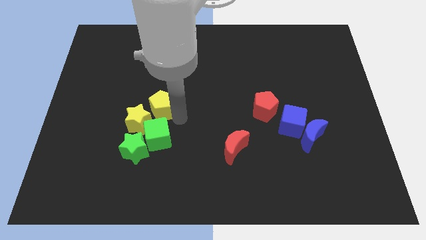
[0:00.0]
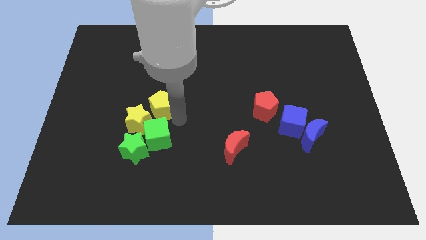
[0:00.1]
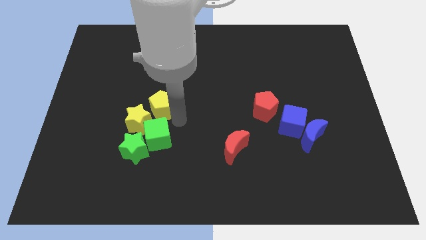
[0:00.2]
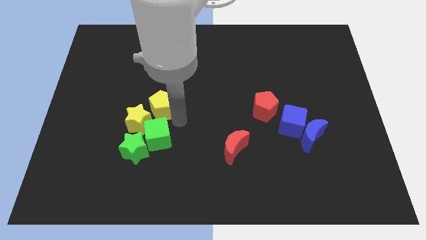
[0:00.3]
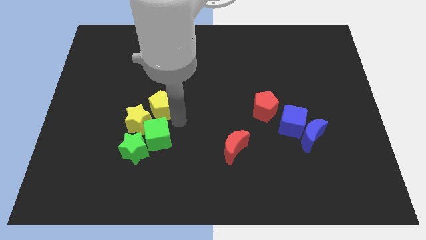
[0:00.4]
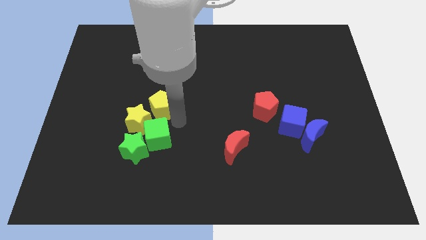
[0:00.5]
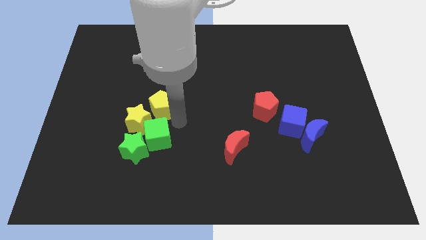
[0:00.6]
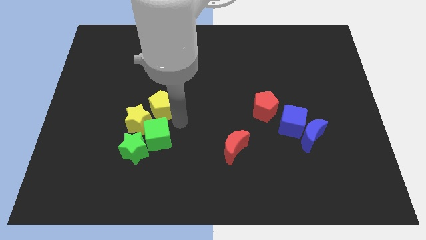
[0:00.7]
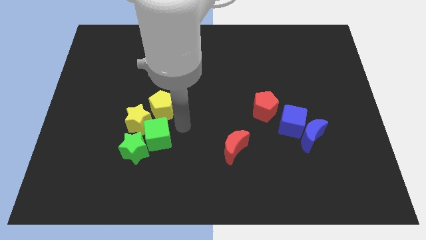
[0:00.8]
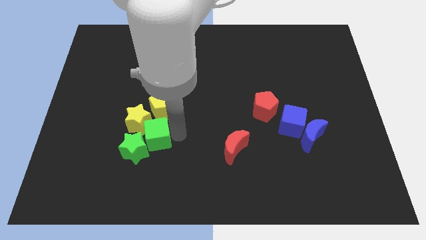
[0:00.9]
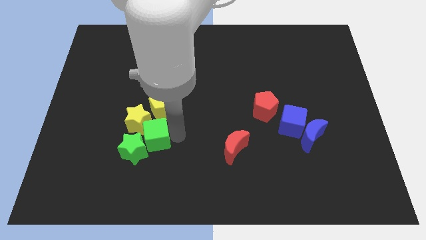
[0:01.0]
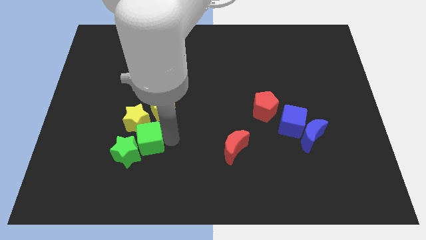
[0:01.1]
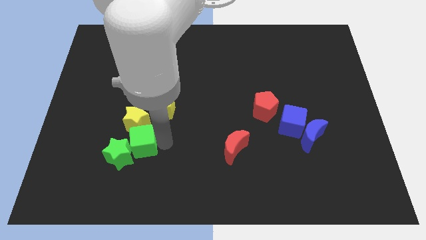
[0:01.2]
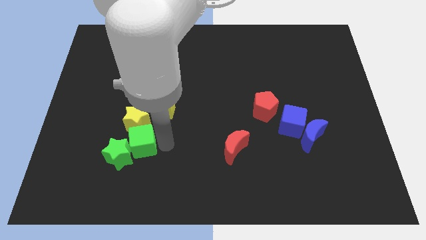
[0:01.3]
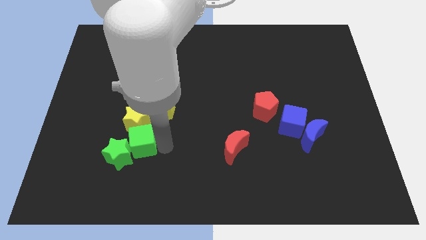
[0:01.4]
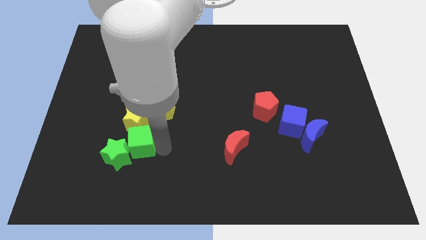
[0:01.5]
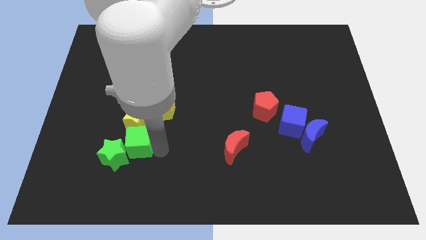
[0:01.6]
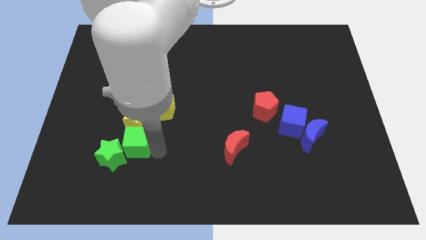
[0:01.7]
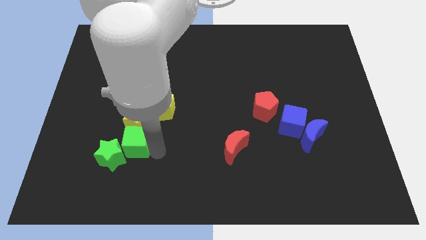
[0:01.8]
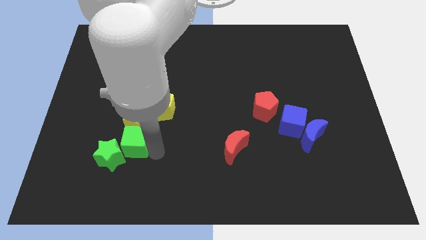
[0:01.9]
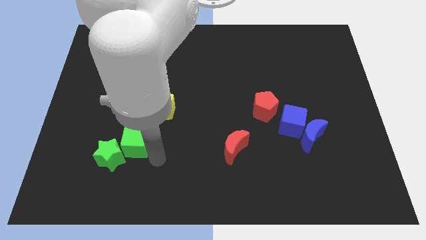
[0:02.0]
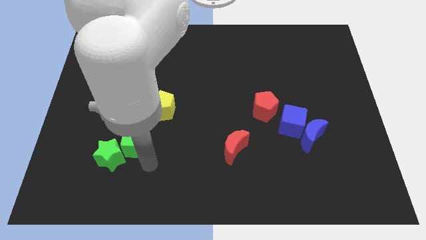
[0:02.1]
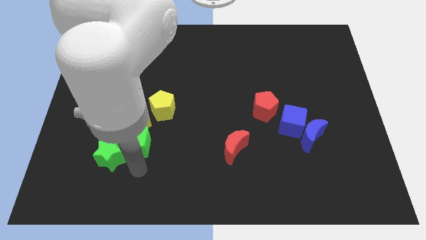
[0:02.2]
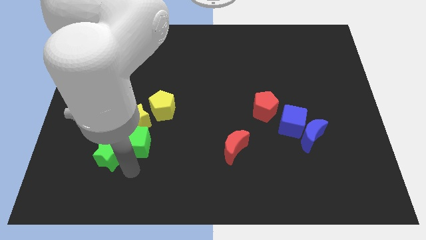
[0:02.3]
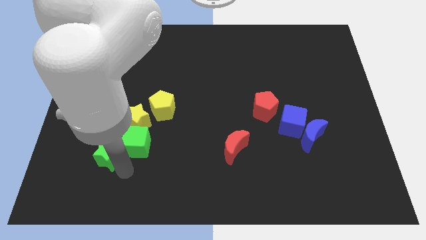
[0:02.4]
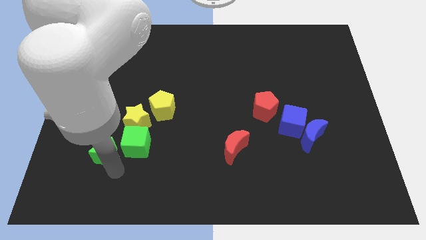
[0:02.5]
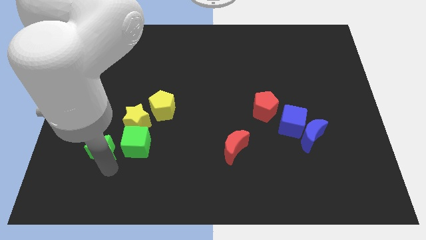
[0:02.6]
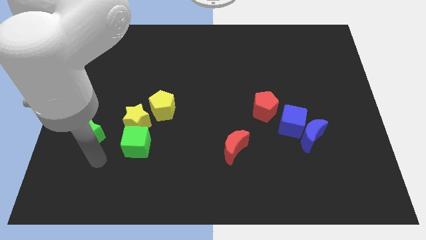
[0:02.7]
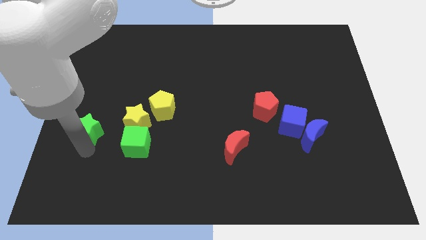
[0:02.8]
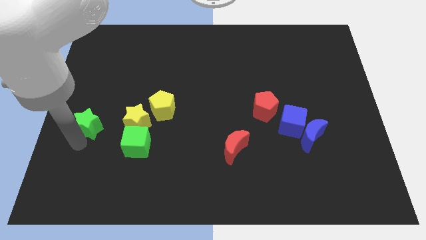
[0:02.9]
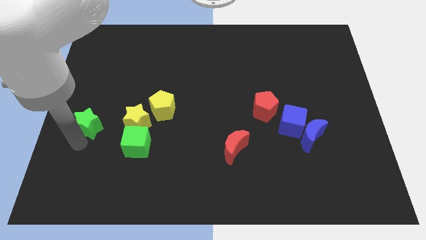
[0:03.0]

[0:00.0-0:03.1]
separate green star from green cube

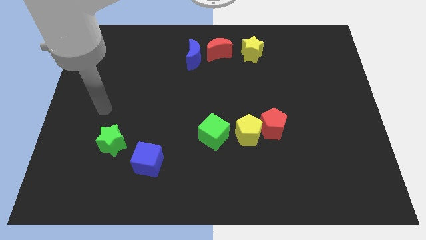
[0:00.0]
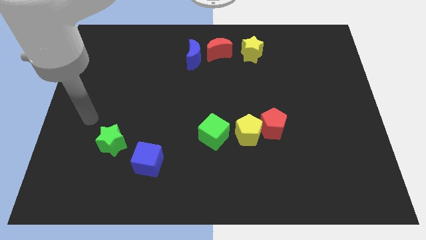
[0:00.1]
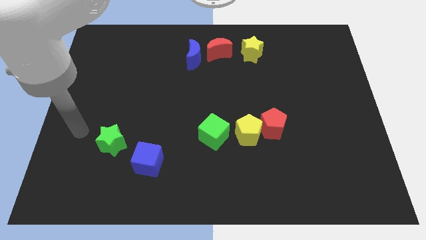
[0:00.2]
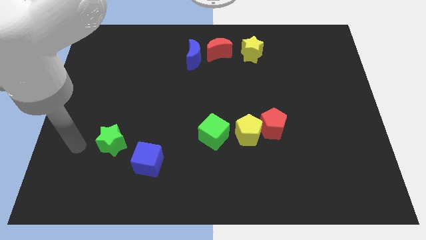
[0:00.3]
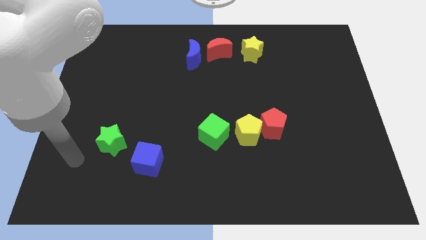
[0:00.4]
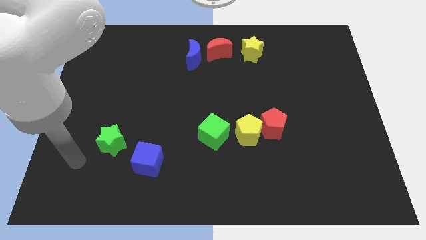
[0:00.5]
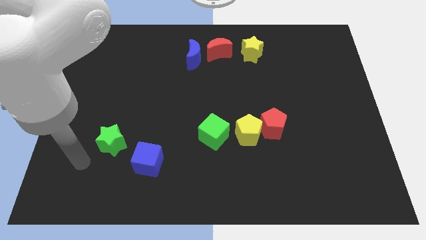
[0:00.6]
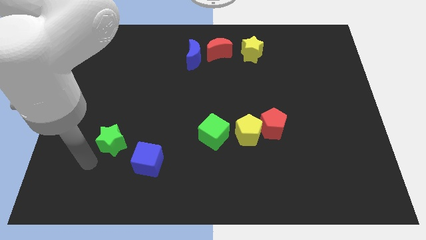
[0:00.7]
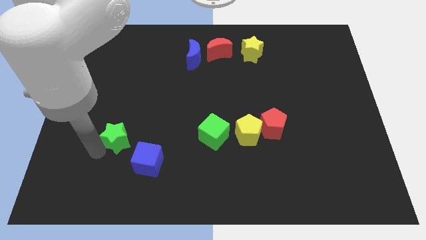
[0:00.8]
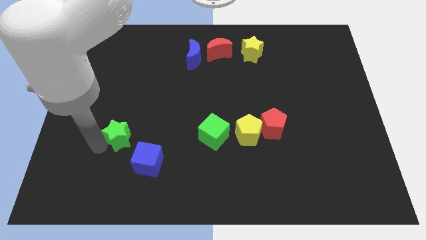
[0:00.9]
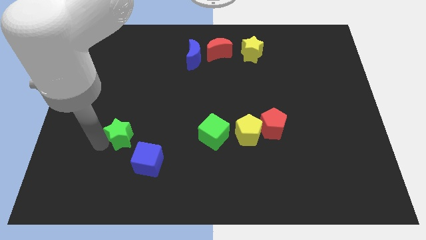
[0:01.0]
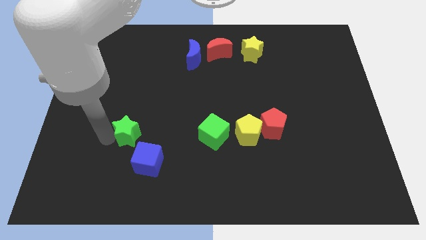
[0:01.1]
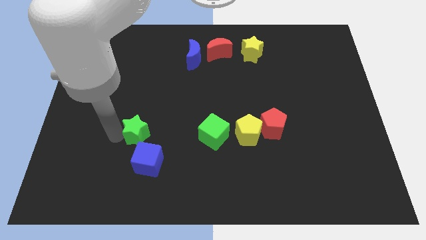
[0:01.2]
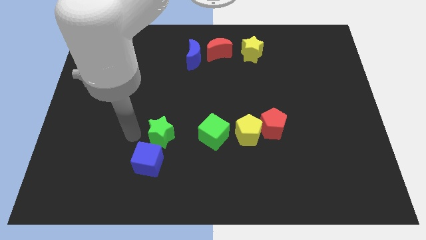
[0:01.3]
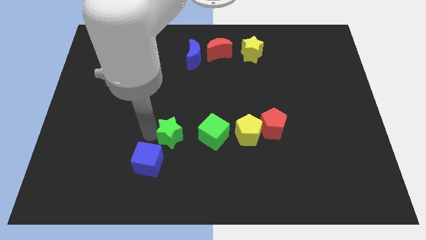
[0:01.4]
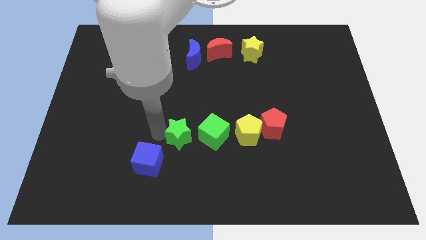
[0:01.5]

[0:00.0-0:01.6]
drag the green star towards the left side of the green cube

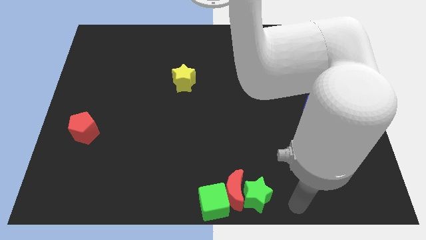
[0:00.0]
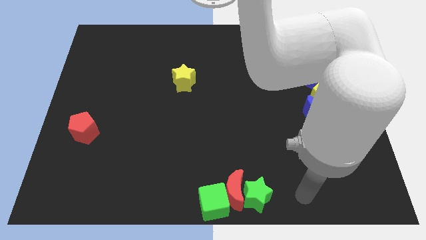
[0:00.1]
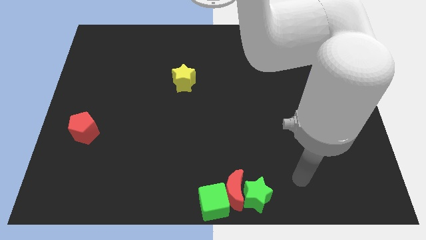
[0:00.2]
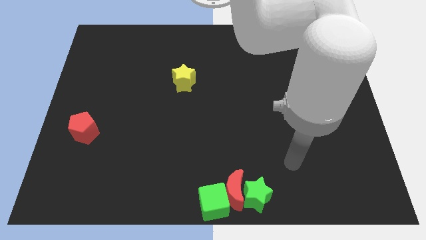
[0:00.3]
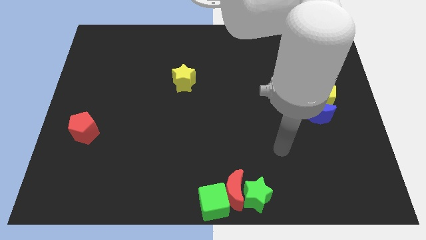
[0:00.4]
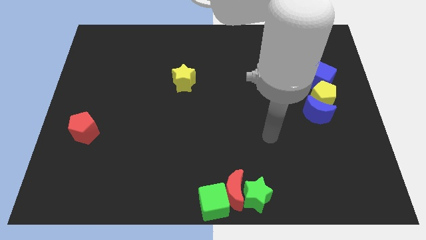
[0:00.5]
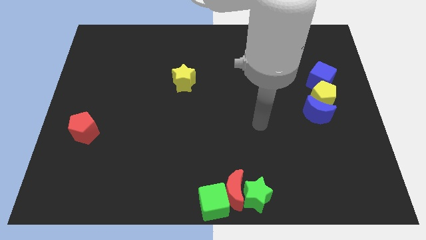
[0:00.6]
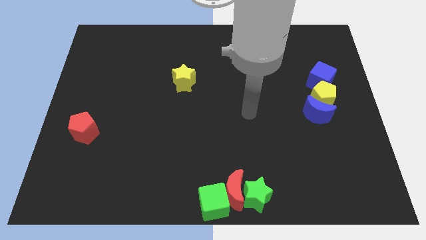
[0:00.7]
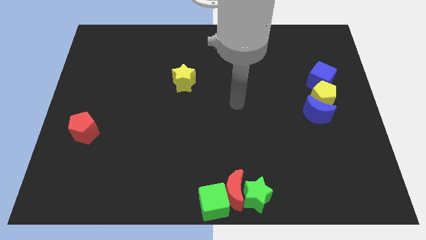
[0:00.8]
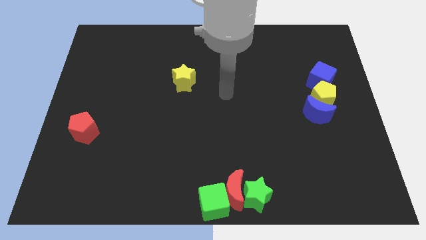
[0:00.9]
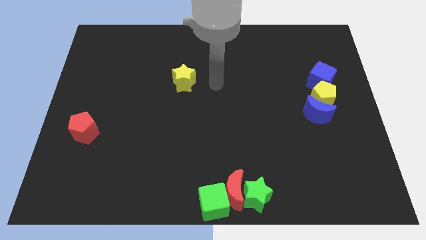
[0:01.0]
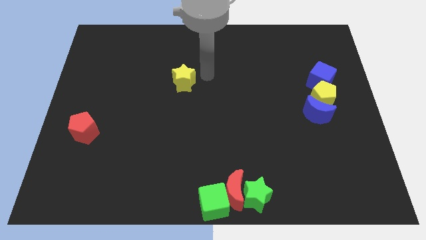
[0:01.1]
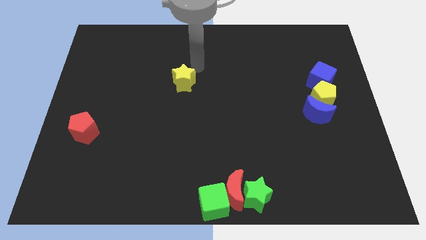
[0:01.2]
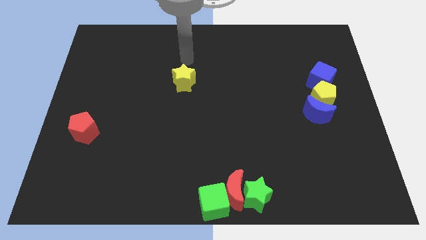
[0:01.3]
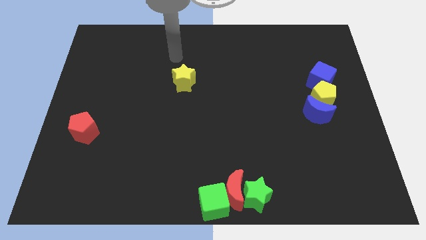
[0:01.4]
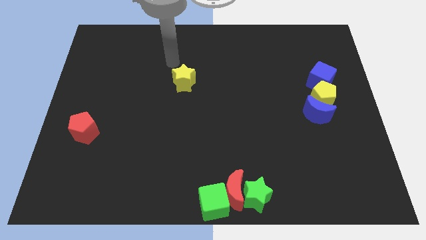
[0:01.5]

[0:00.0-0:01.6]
move yourself away from the green star

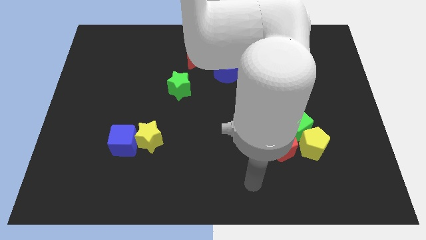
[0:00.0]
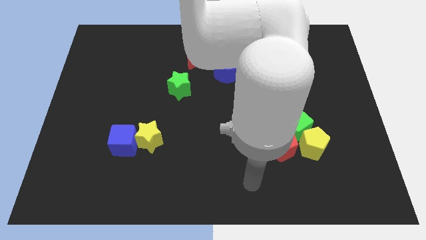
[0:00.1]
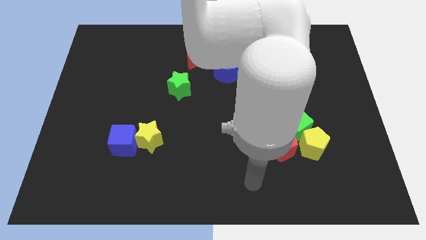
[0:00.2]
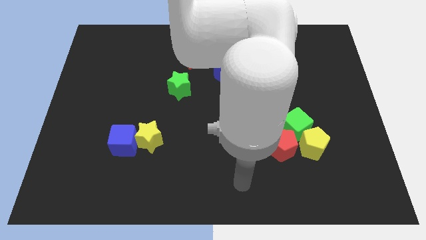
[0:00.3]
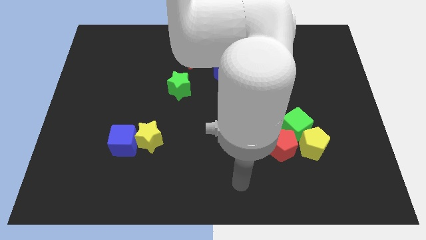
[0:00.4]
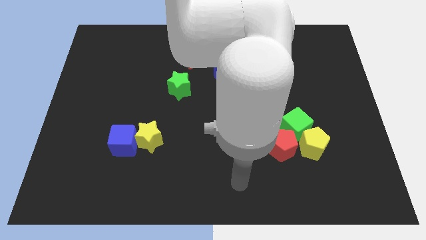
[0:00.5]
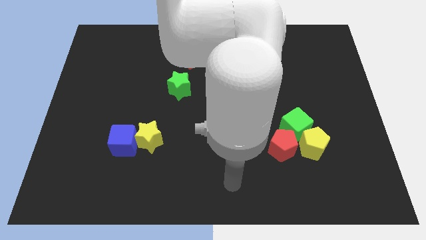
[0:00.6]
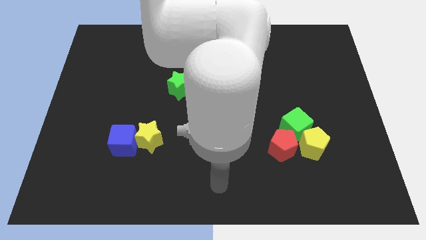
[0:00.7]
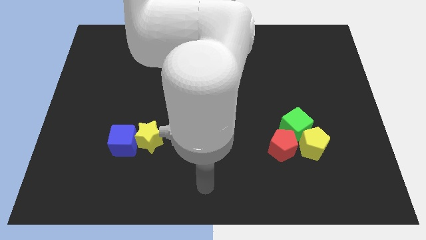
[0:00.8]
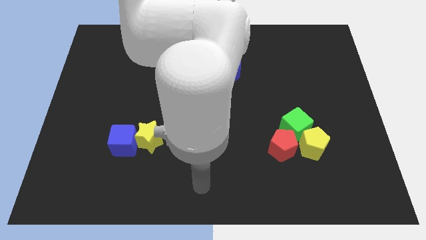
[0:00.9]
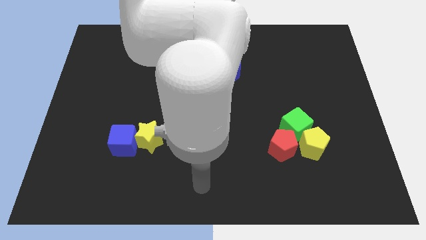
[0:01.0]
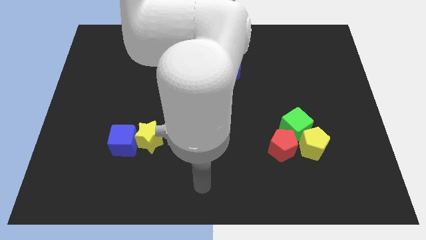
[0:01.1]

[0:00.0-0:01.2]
move the arm right to the left

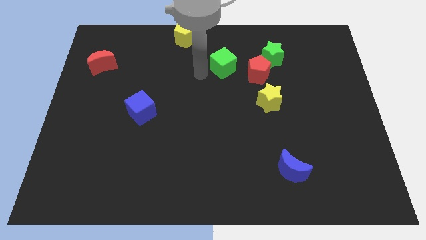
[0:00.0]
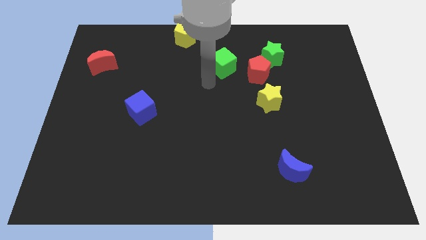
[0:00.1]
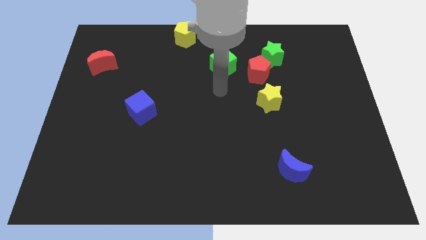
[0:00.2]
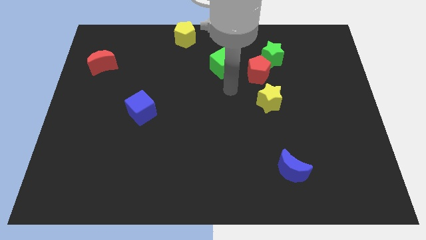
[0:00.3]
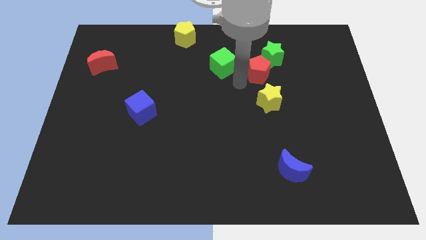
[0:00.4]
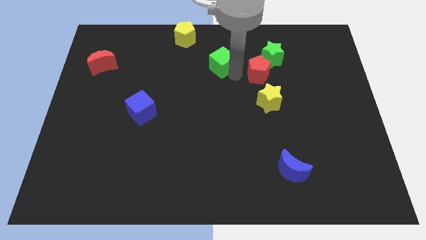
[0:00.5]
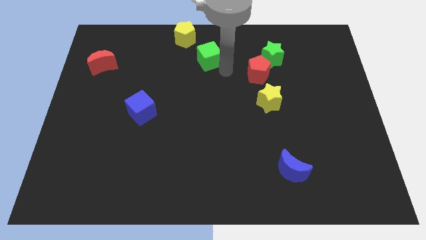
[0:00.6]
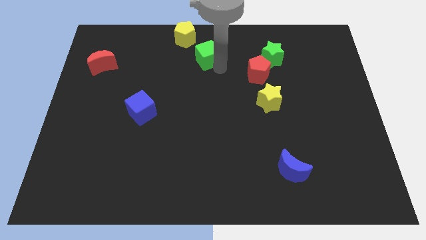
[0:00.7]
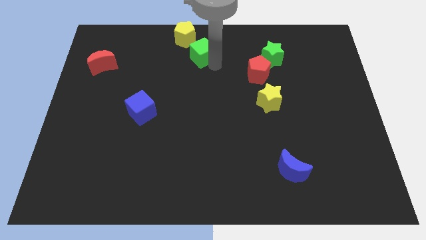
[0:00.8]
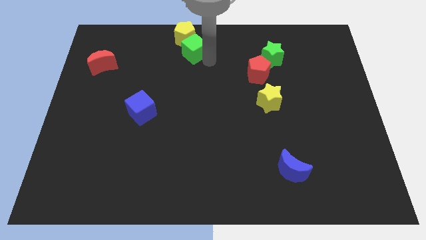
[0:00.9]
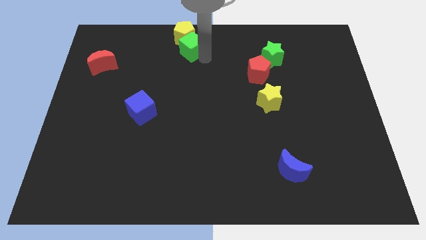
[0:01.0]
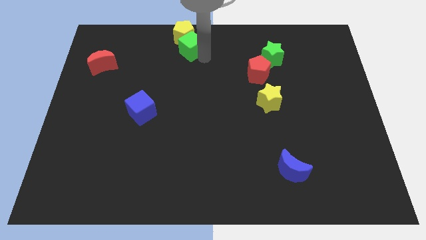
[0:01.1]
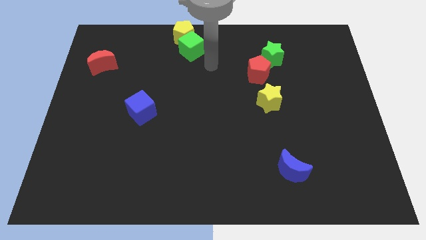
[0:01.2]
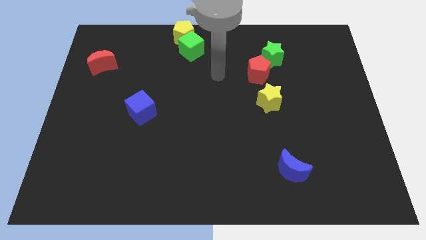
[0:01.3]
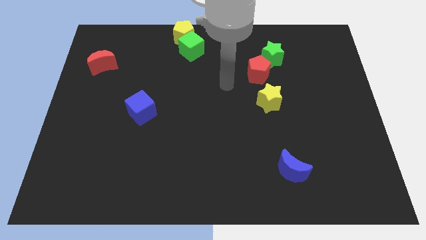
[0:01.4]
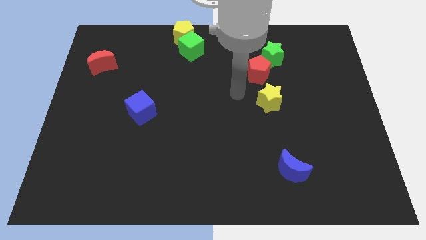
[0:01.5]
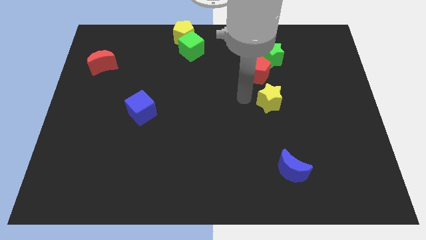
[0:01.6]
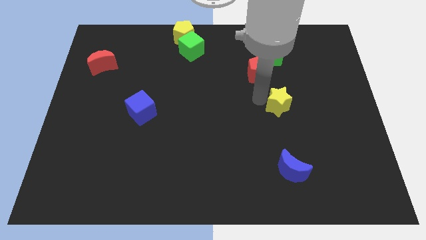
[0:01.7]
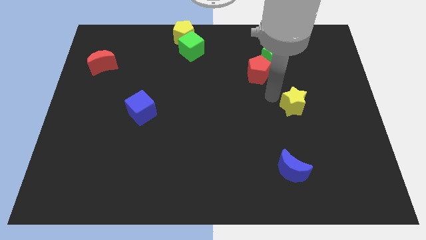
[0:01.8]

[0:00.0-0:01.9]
place your arm between red pentagon and yellow star
